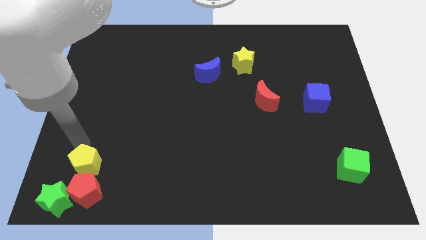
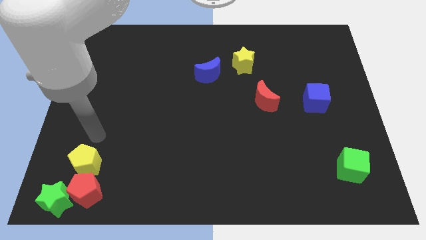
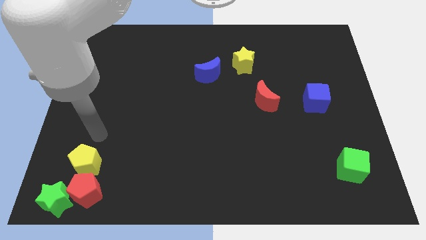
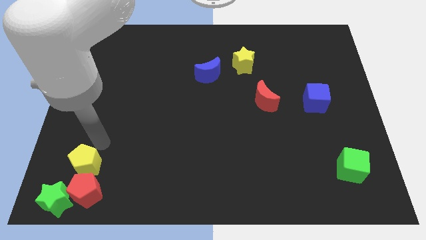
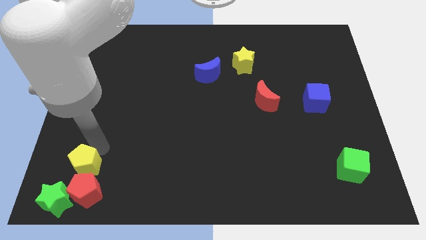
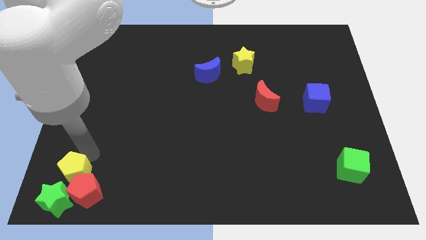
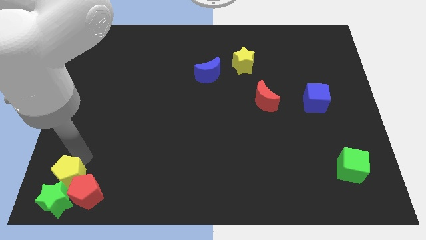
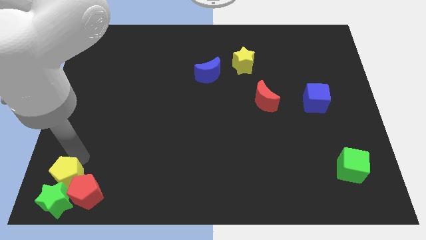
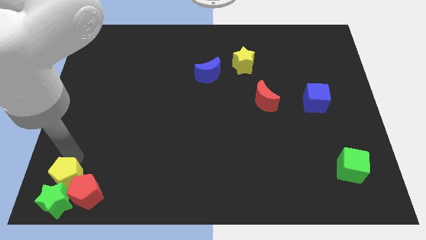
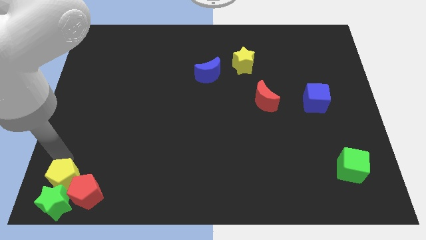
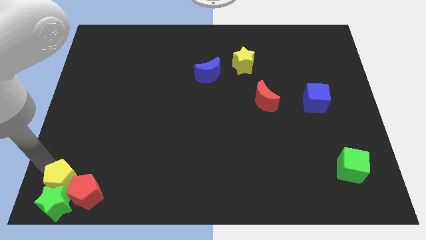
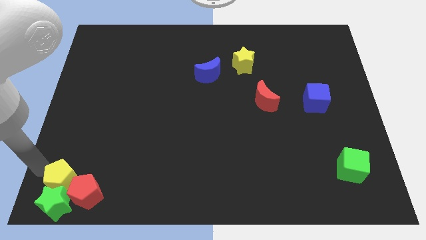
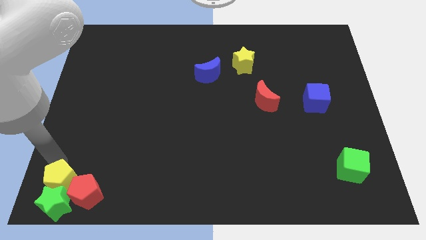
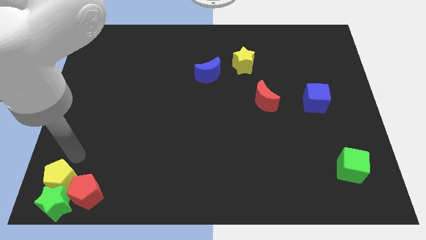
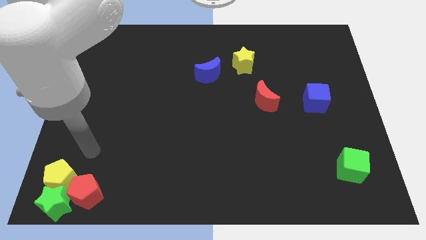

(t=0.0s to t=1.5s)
push the yellow pentagon above to the green star

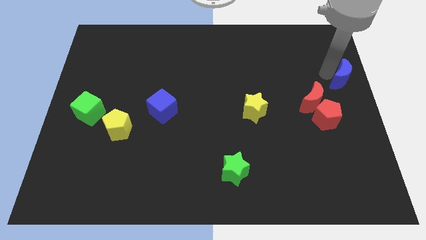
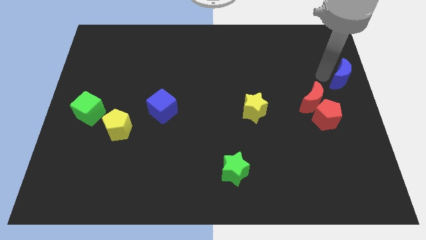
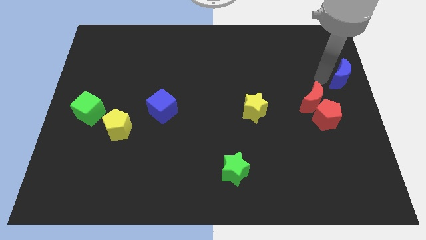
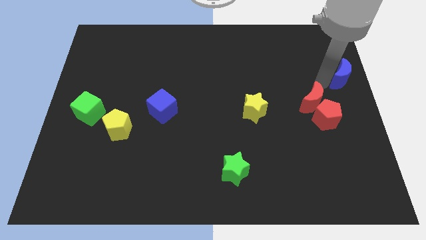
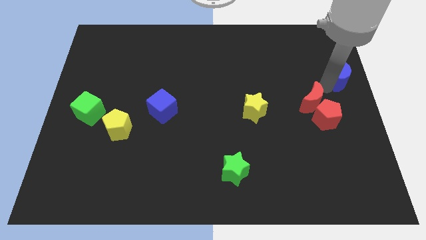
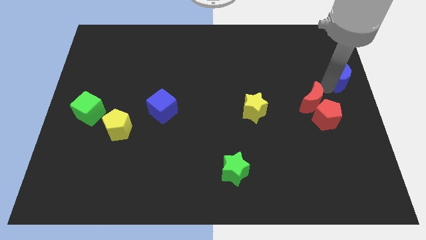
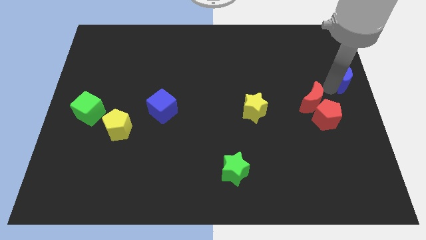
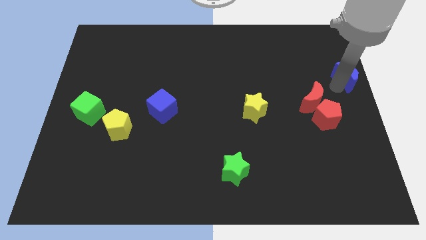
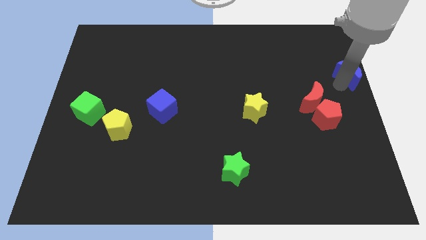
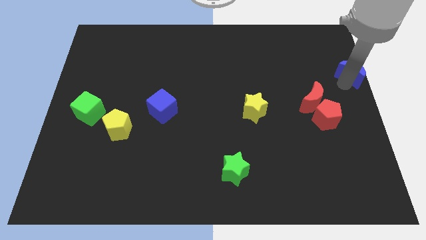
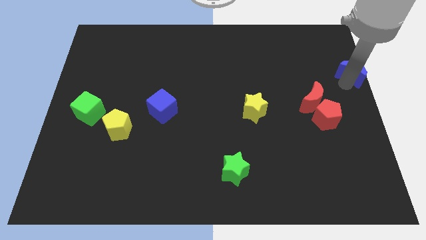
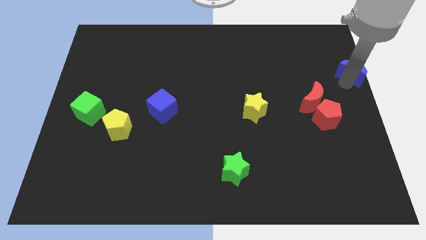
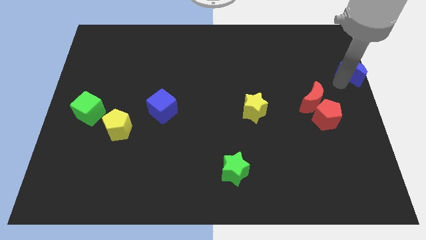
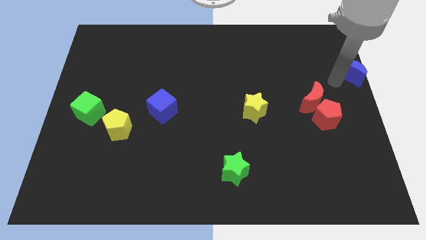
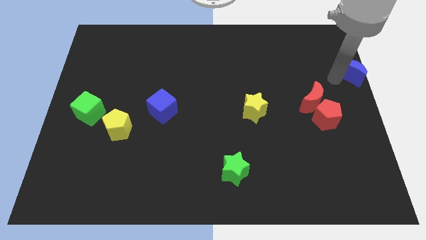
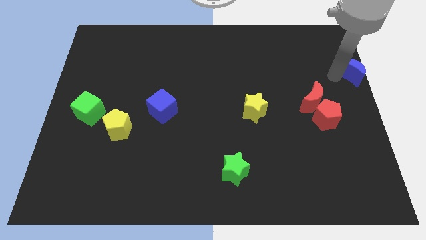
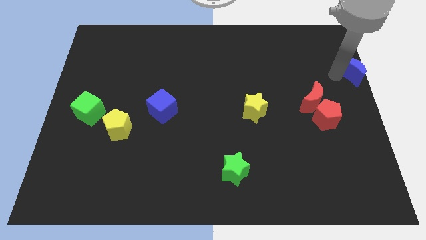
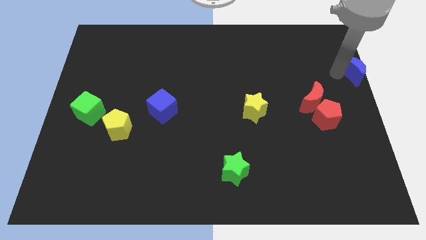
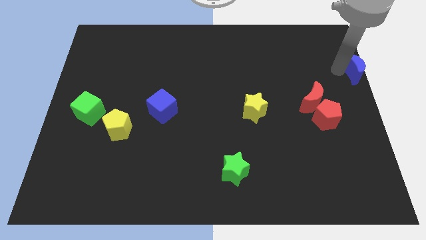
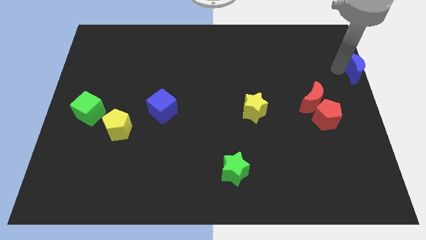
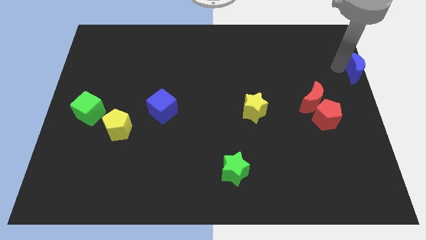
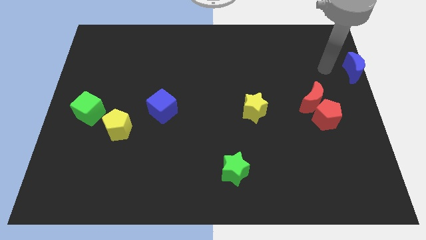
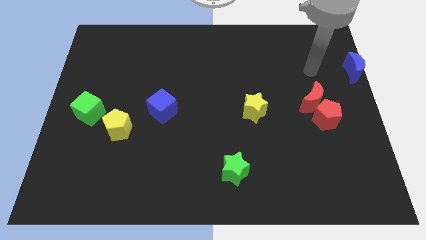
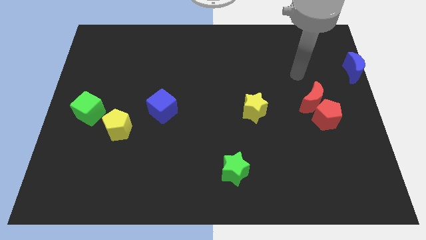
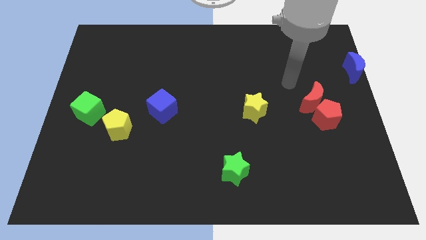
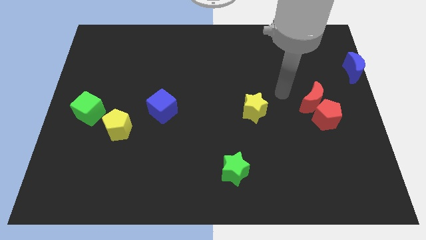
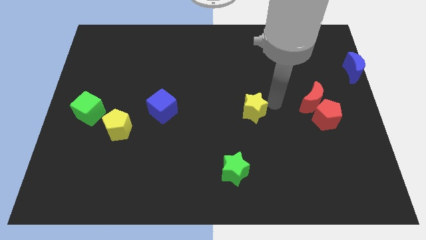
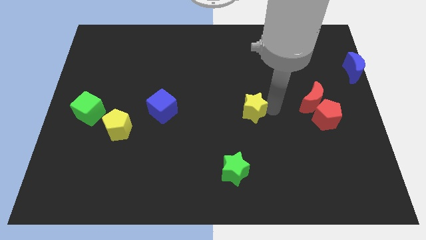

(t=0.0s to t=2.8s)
put the blue crescent to the center right of the board and go away

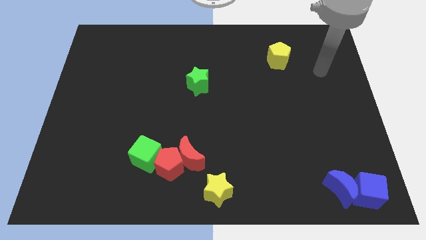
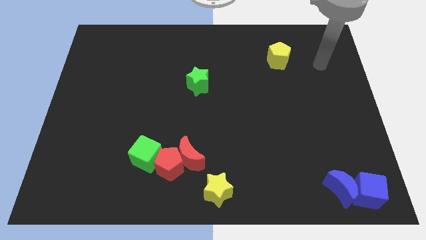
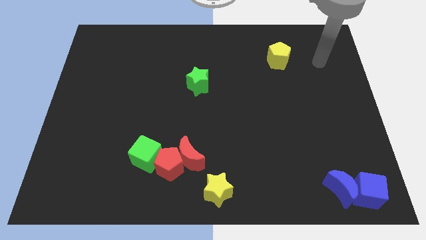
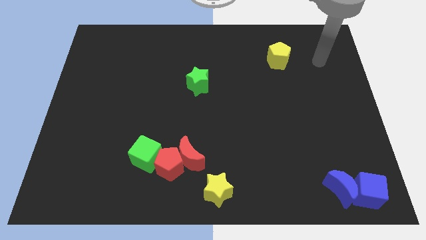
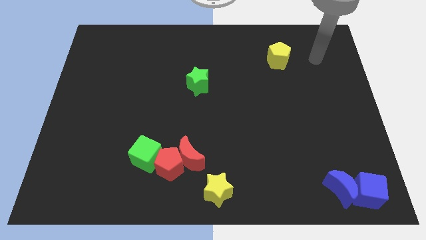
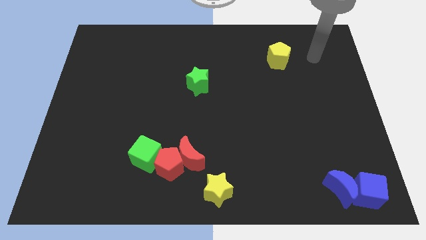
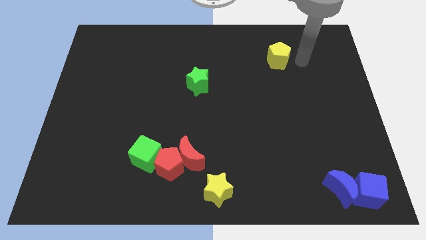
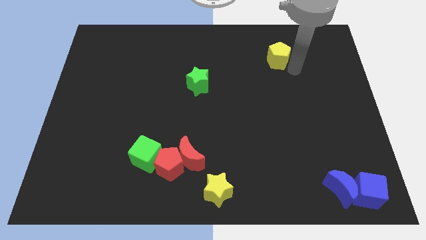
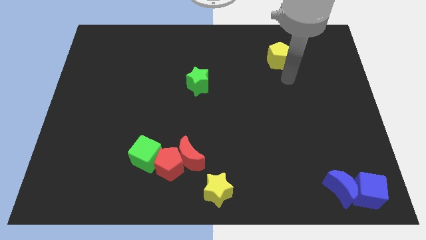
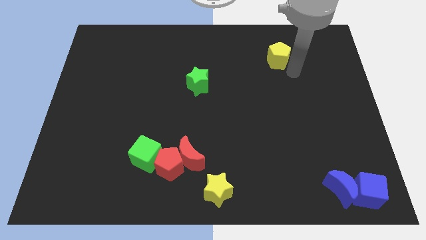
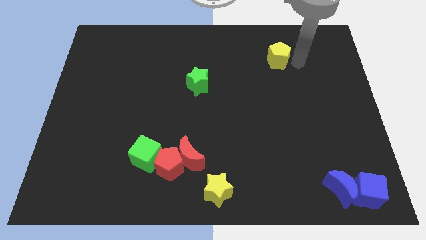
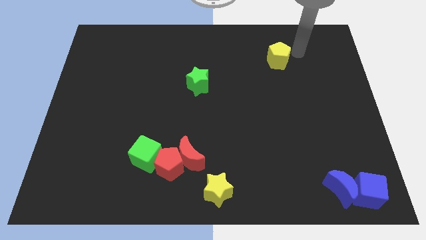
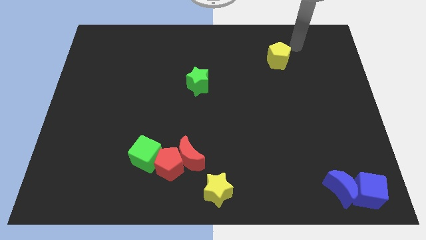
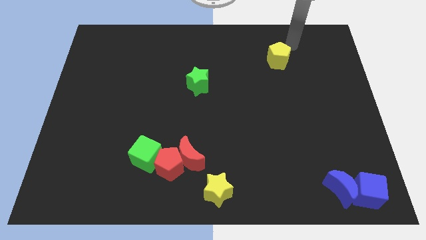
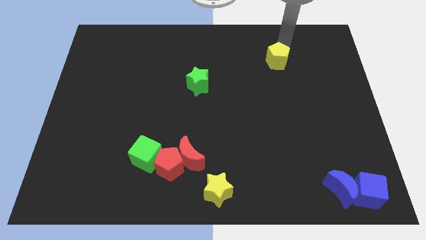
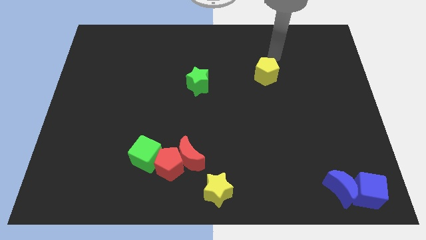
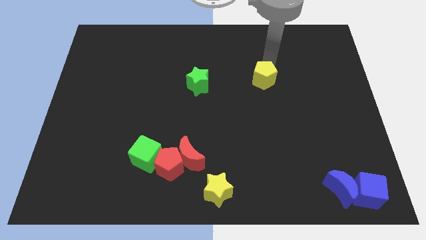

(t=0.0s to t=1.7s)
place the yellow pentagon right to the green star

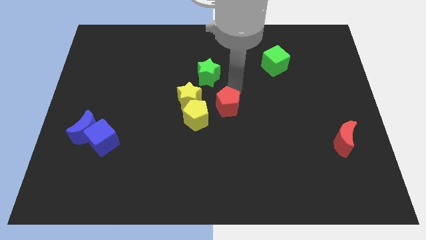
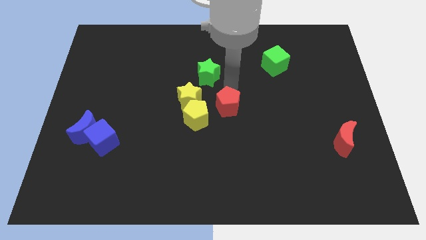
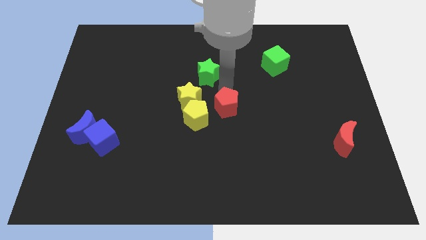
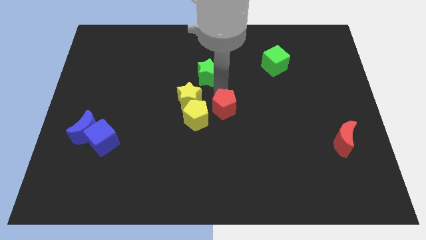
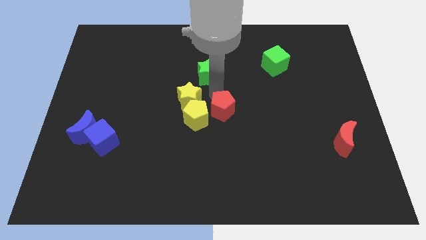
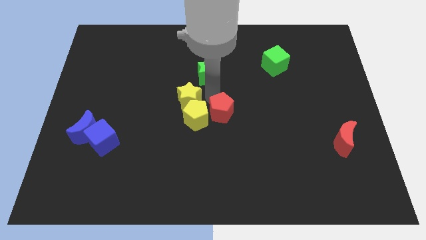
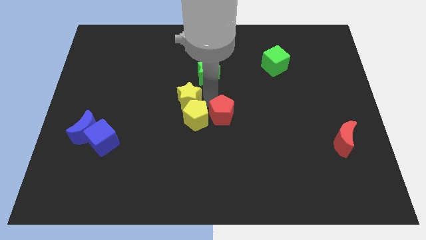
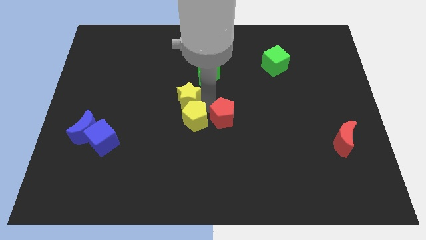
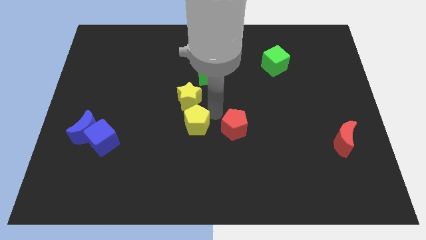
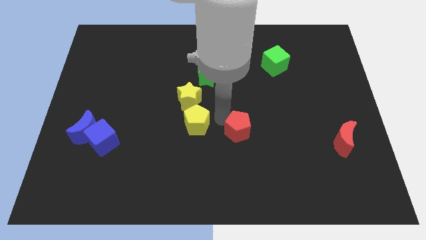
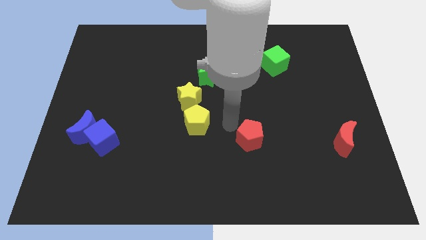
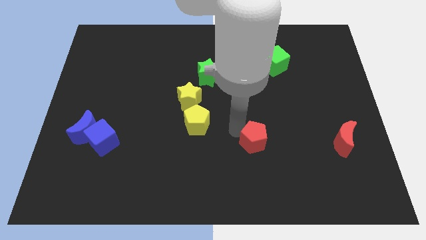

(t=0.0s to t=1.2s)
place the red pentagon diagonally to the bottom right of the yellow pentagon

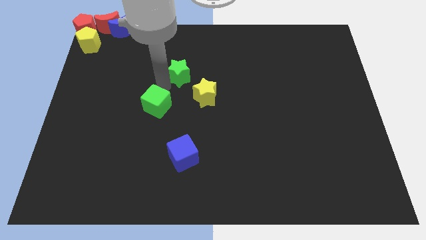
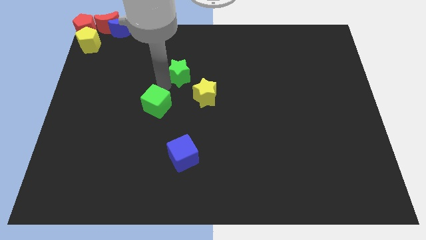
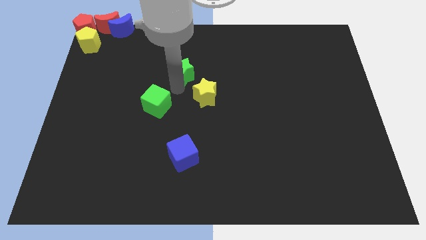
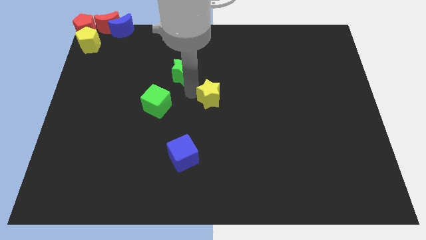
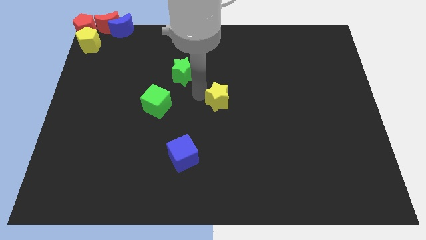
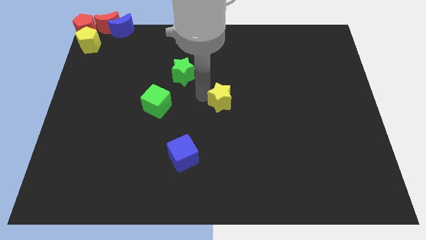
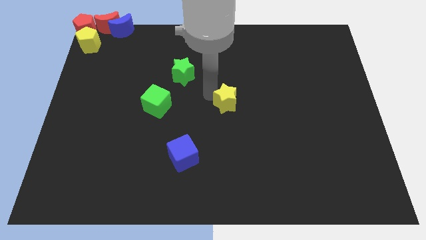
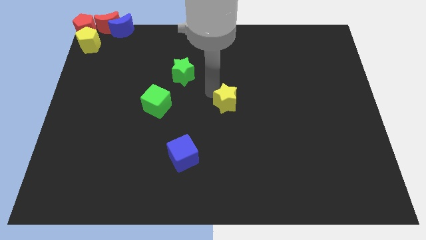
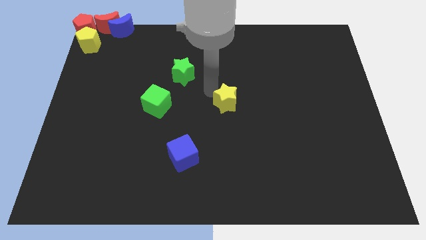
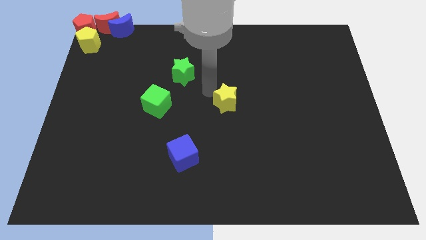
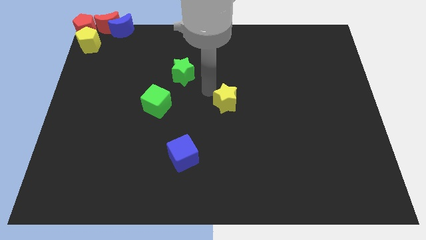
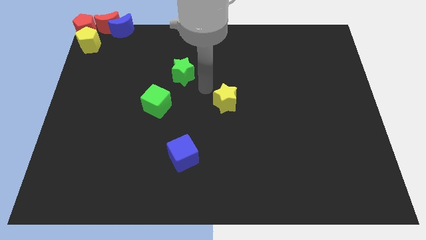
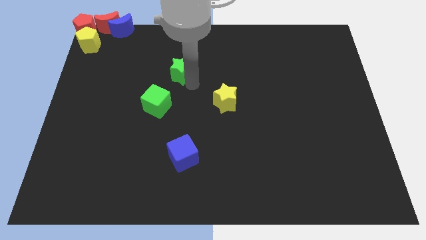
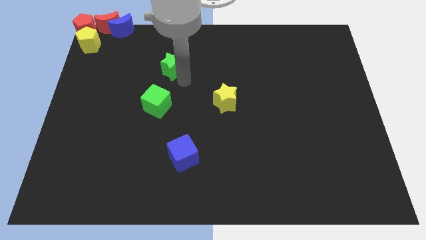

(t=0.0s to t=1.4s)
separate the yellow star from the green star

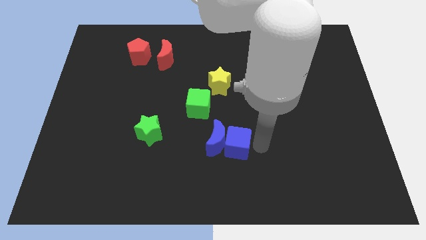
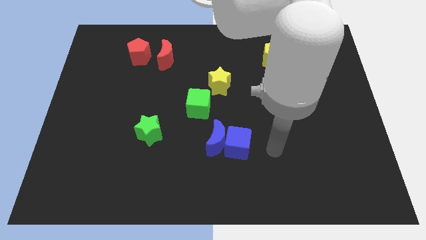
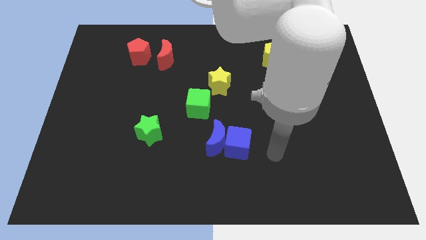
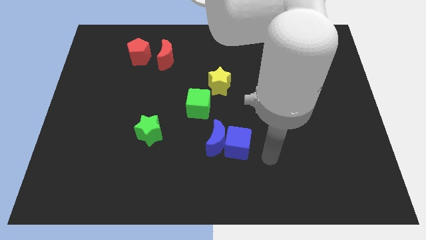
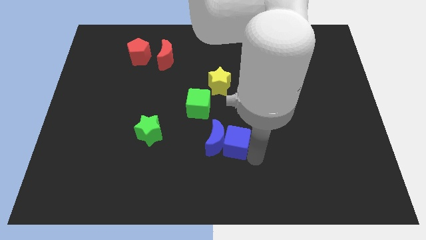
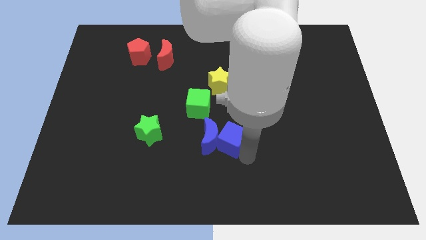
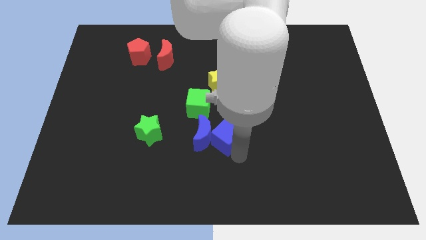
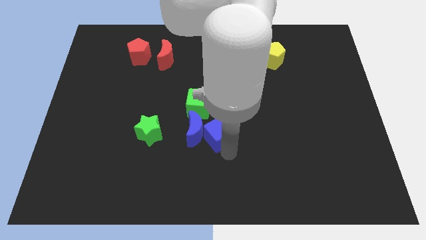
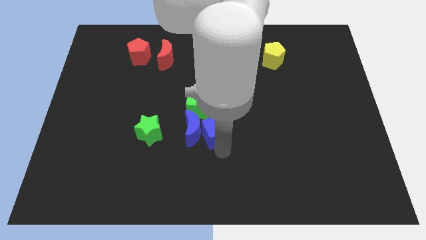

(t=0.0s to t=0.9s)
move blue cube and blue crescent together slightly to the left side
